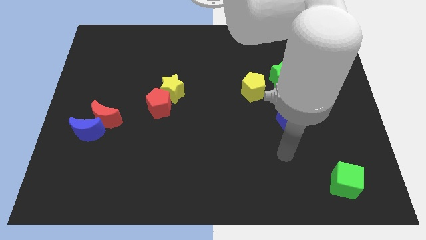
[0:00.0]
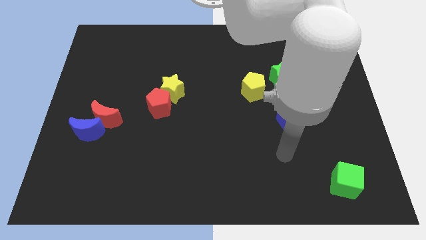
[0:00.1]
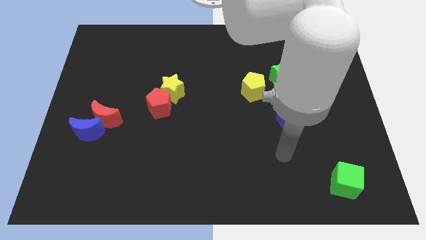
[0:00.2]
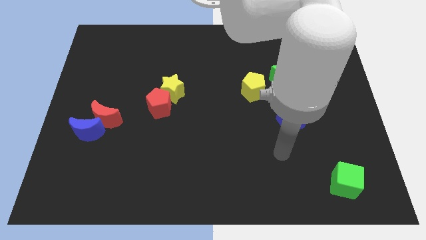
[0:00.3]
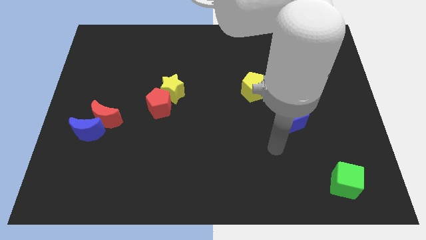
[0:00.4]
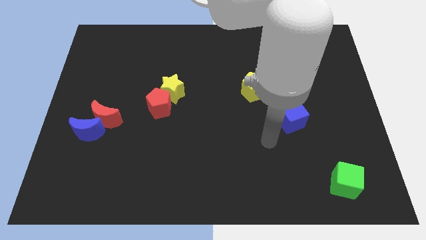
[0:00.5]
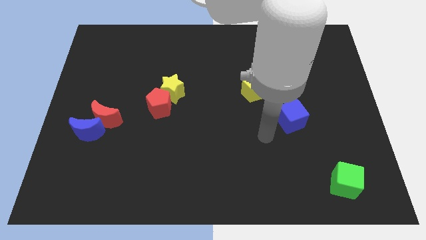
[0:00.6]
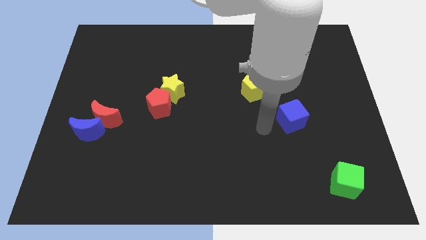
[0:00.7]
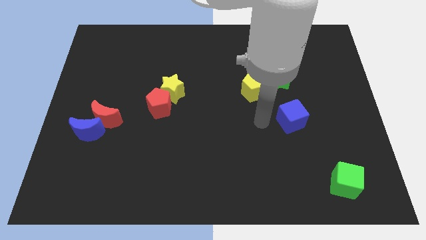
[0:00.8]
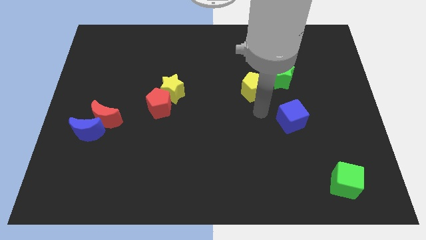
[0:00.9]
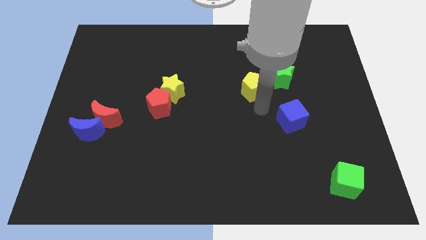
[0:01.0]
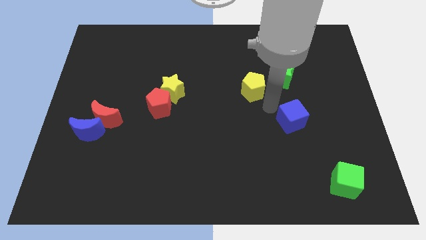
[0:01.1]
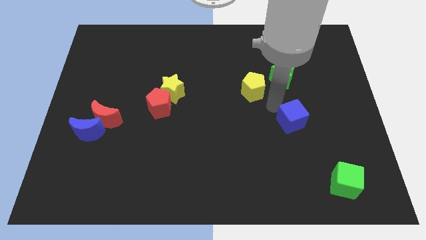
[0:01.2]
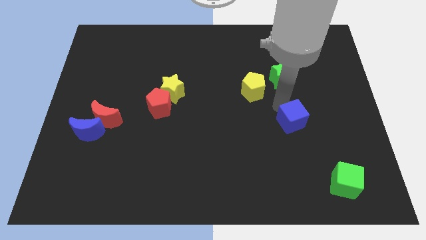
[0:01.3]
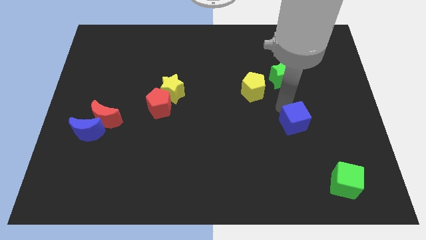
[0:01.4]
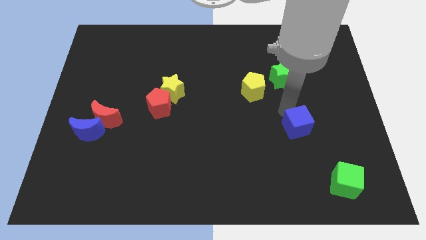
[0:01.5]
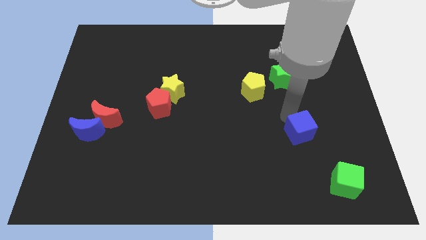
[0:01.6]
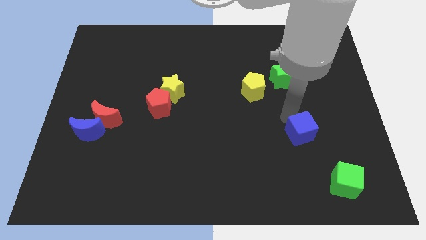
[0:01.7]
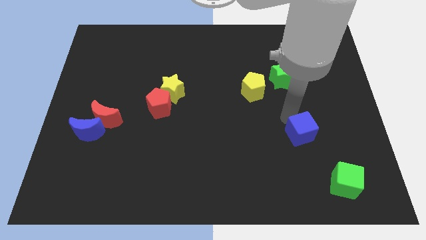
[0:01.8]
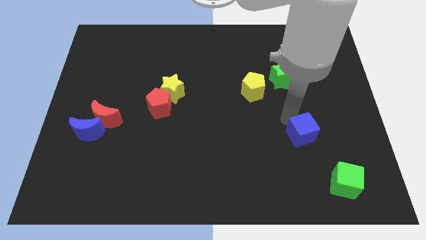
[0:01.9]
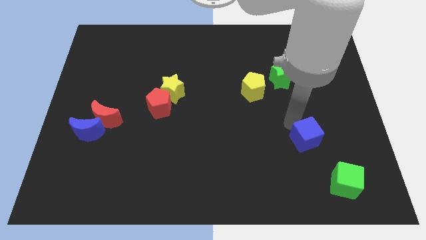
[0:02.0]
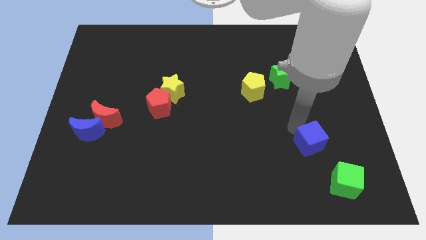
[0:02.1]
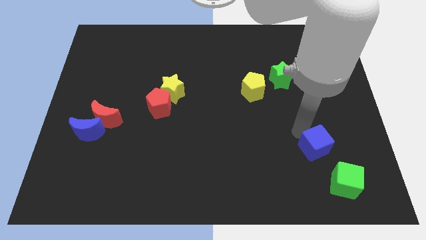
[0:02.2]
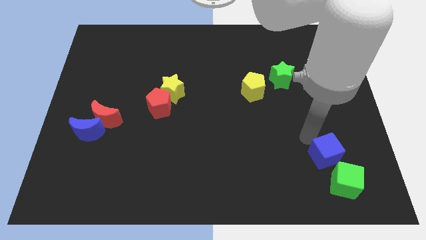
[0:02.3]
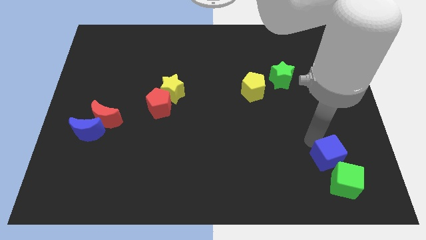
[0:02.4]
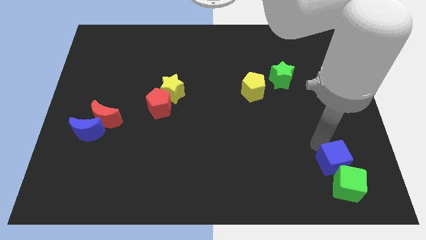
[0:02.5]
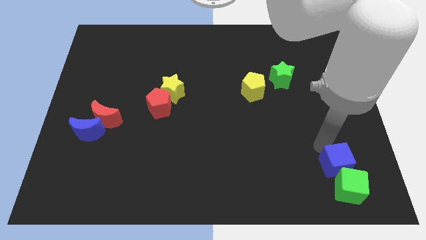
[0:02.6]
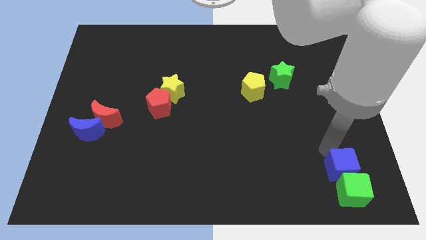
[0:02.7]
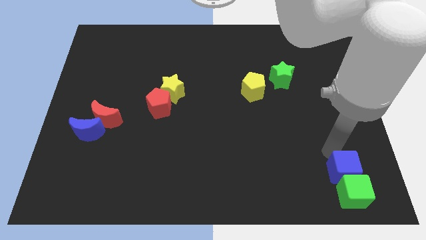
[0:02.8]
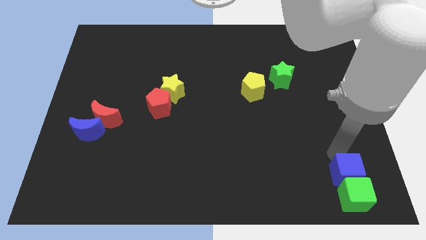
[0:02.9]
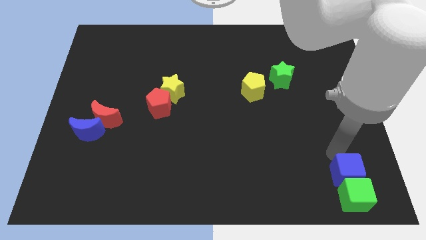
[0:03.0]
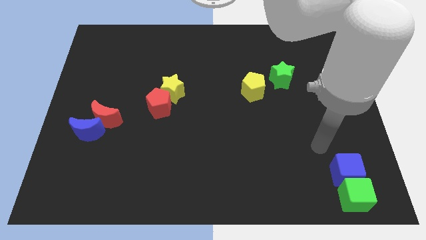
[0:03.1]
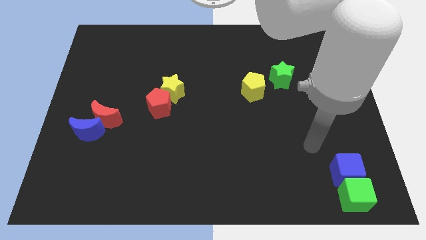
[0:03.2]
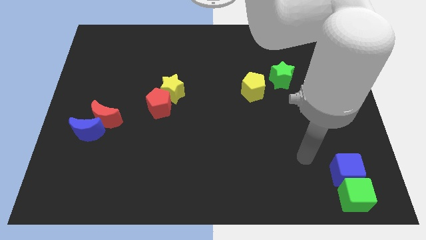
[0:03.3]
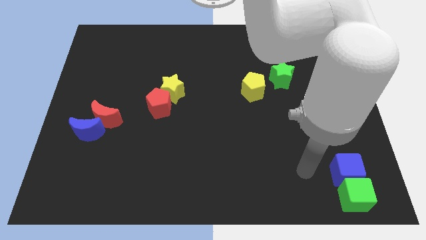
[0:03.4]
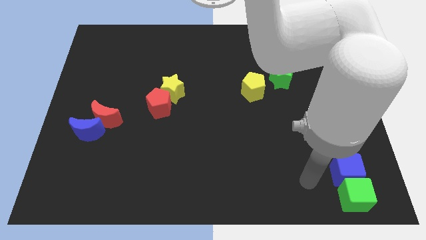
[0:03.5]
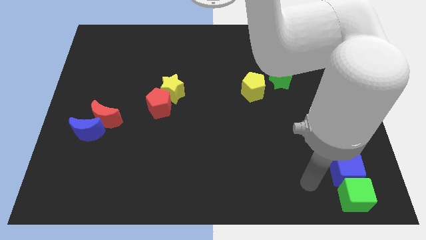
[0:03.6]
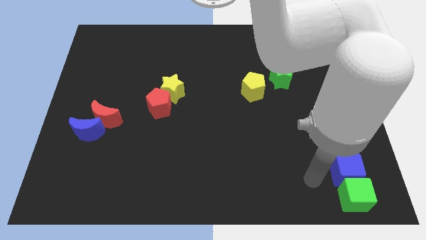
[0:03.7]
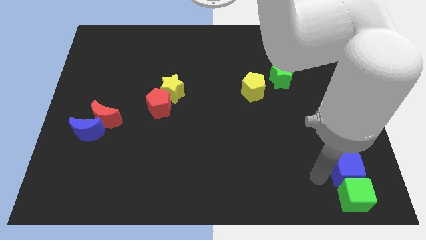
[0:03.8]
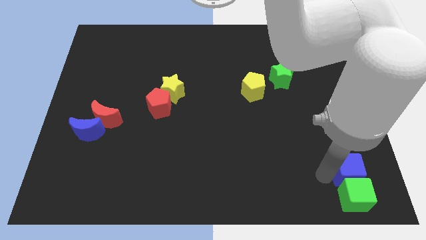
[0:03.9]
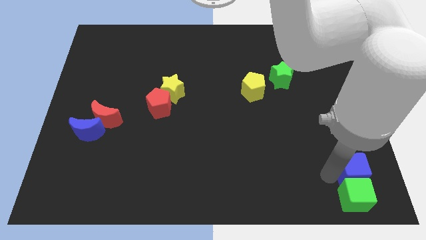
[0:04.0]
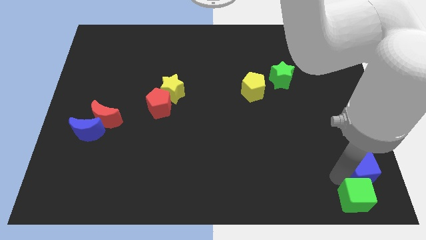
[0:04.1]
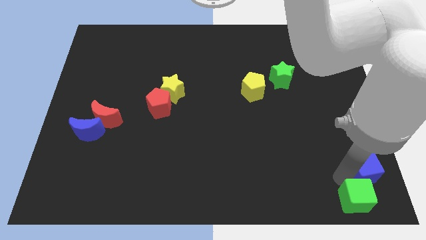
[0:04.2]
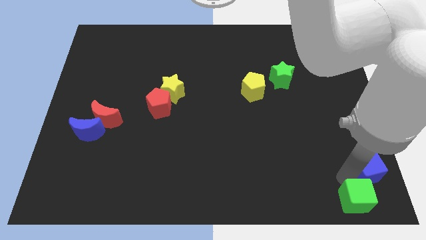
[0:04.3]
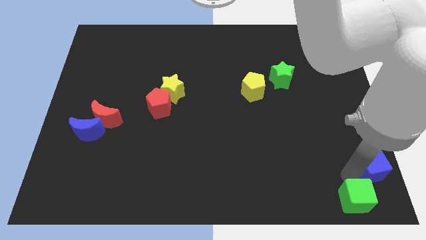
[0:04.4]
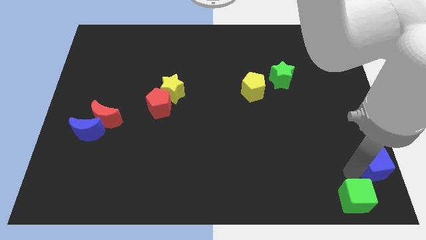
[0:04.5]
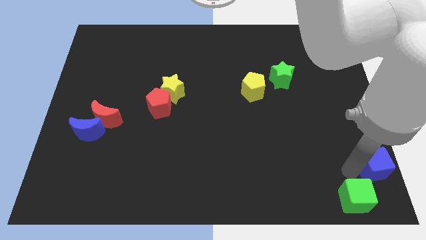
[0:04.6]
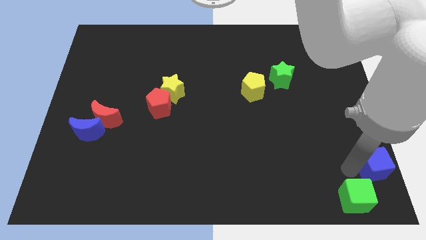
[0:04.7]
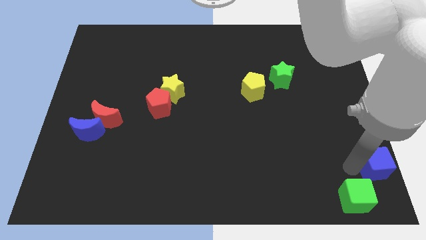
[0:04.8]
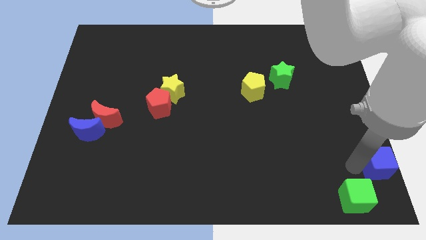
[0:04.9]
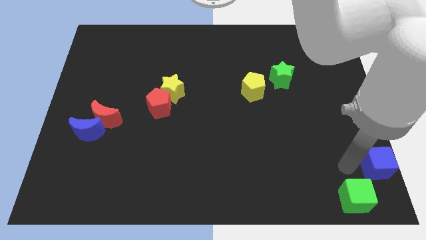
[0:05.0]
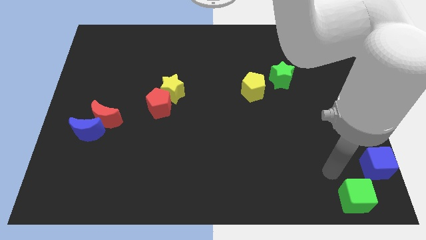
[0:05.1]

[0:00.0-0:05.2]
push the blue cube to the top right of the green cube

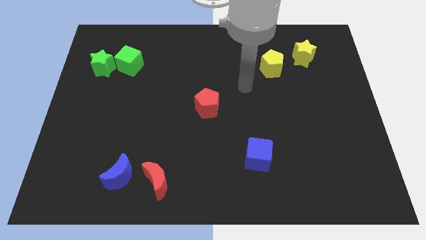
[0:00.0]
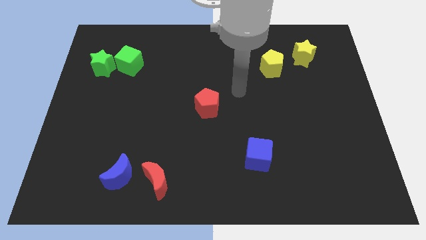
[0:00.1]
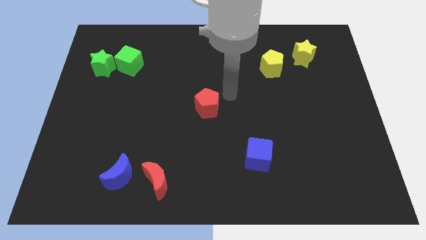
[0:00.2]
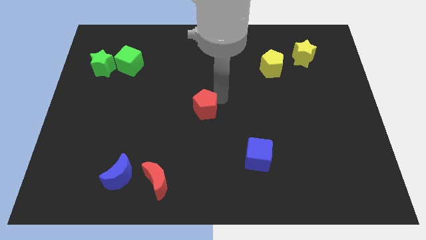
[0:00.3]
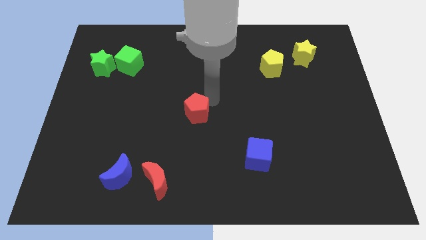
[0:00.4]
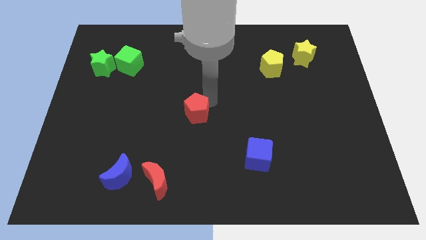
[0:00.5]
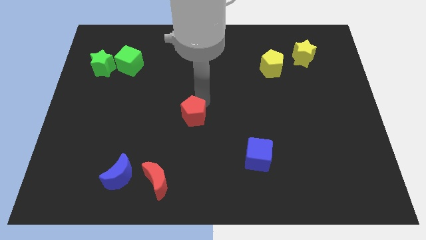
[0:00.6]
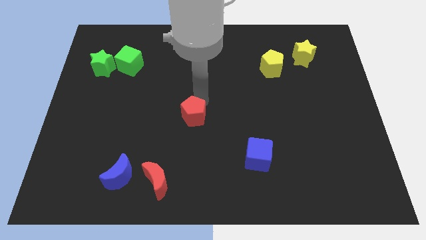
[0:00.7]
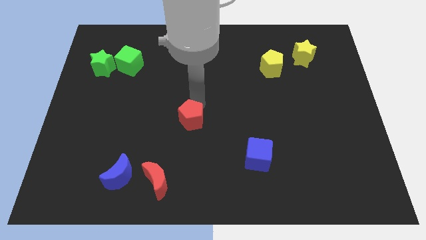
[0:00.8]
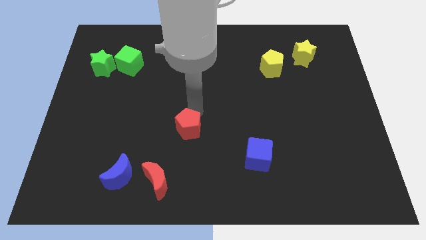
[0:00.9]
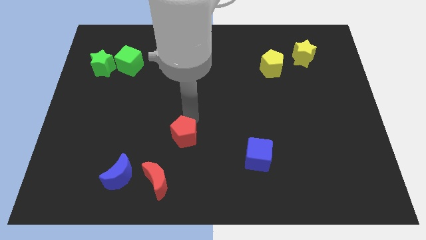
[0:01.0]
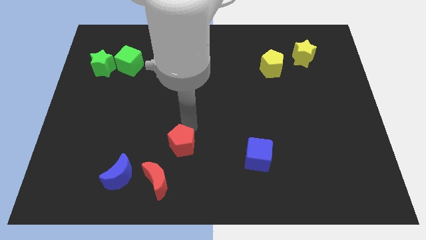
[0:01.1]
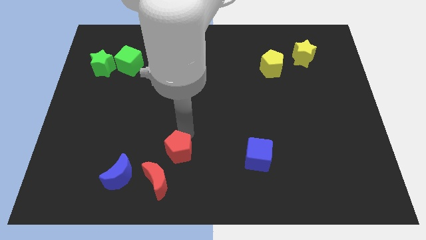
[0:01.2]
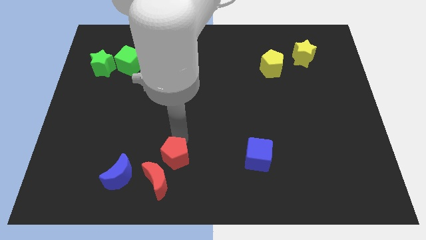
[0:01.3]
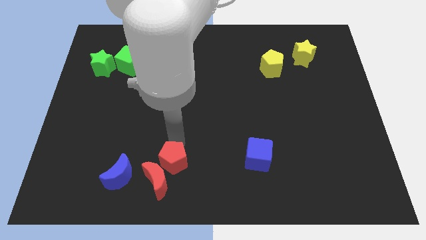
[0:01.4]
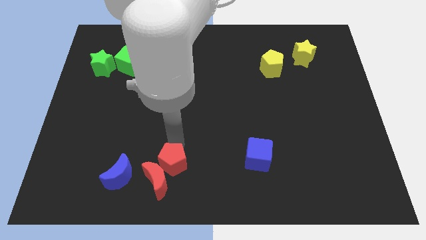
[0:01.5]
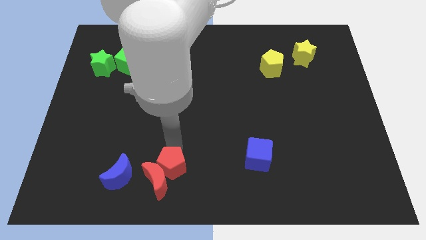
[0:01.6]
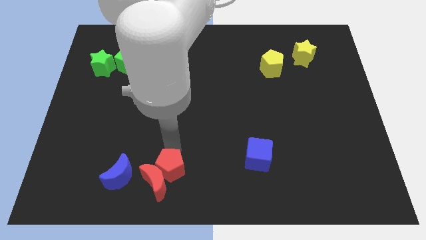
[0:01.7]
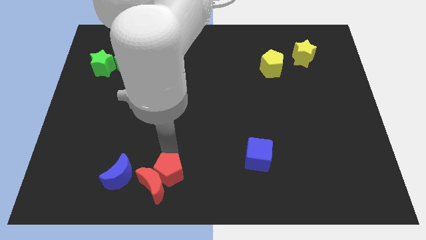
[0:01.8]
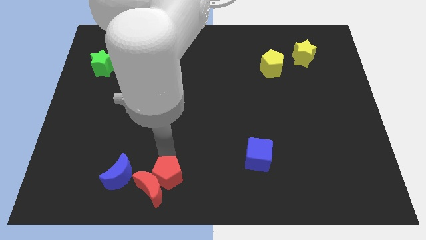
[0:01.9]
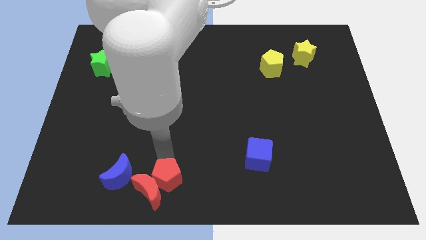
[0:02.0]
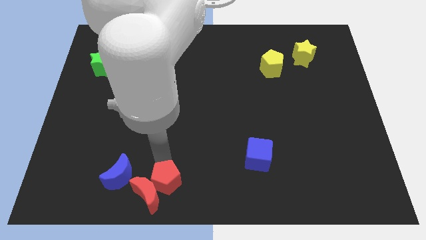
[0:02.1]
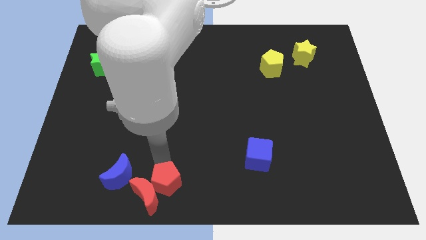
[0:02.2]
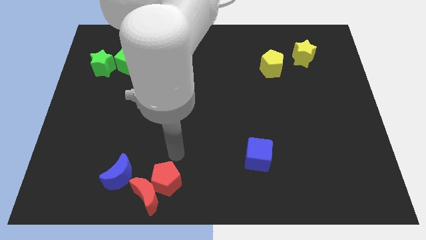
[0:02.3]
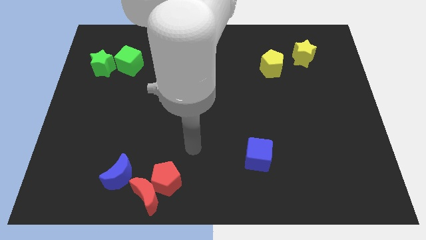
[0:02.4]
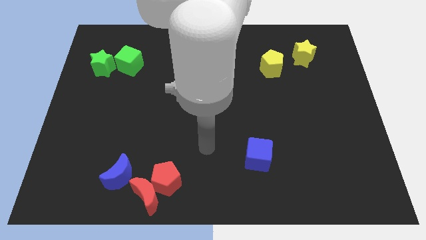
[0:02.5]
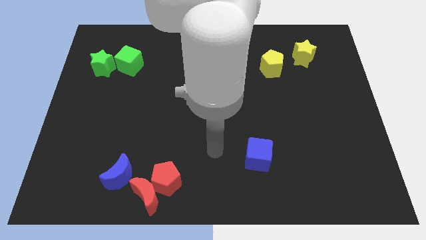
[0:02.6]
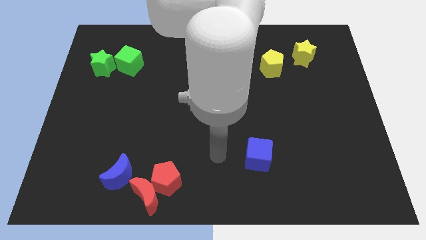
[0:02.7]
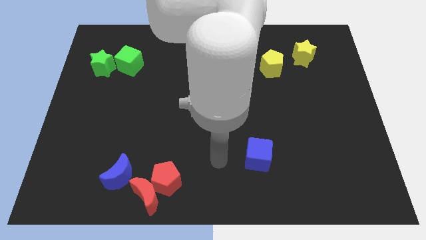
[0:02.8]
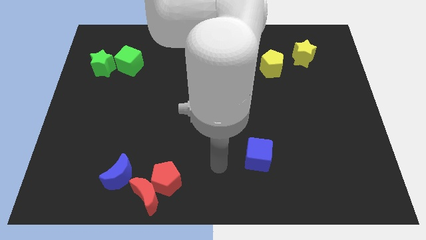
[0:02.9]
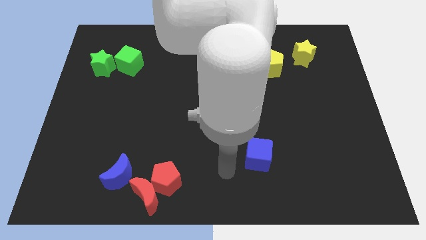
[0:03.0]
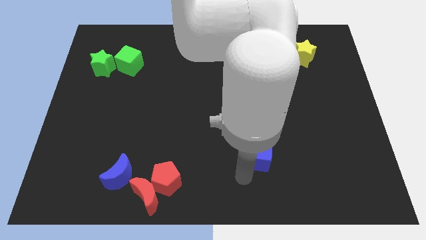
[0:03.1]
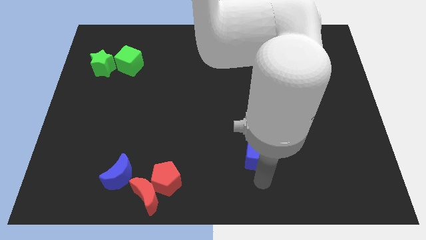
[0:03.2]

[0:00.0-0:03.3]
push the red pentagon into red crescent

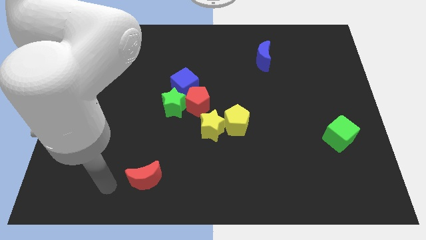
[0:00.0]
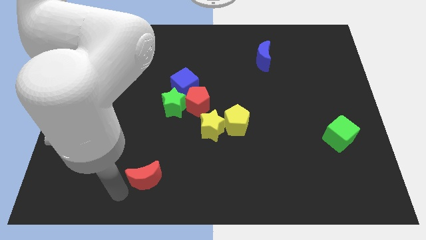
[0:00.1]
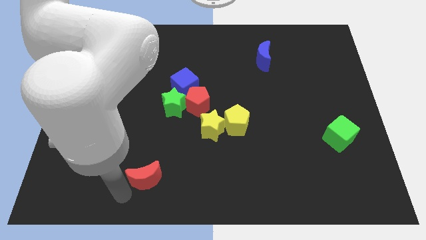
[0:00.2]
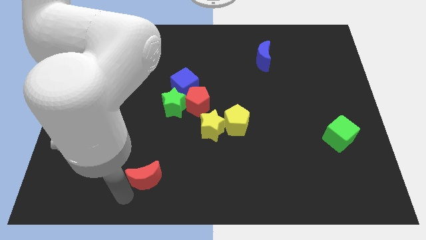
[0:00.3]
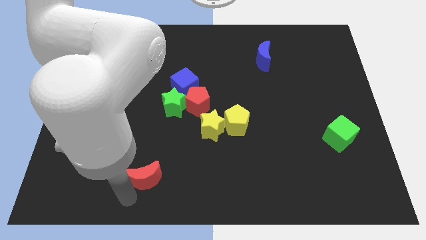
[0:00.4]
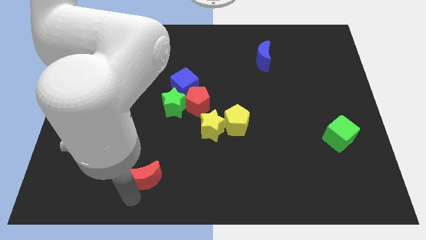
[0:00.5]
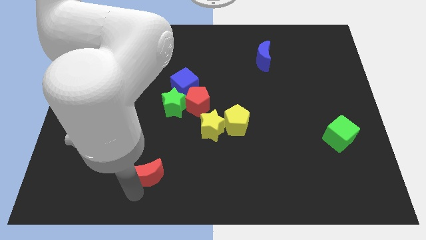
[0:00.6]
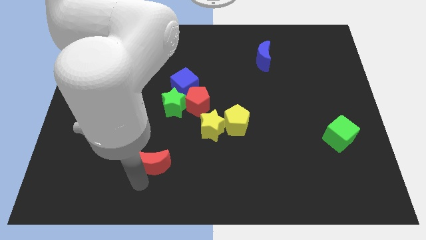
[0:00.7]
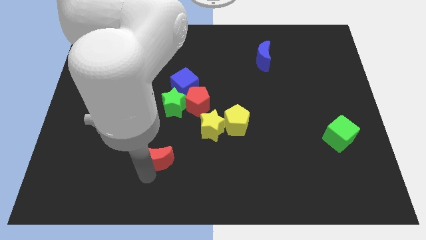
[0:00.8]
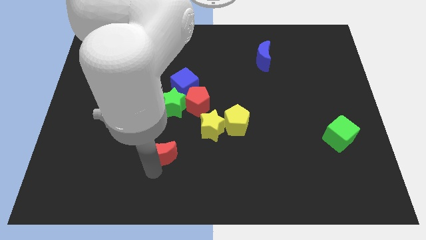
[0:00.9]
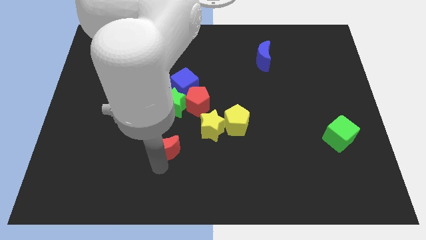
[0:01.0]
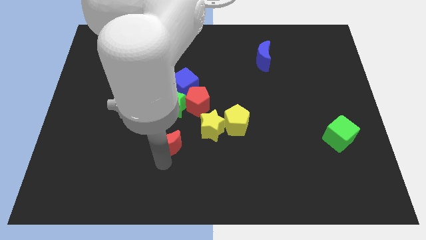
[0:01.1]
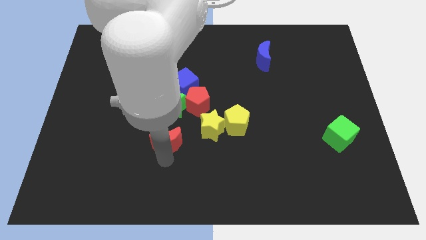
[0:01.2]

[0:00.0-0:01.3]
push the red crescent up slightly
